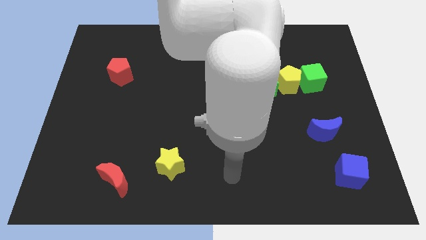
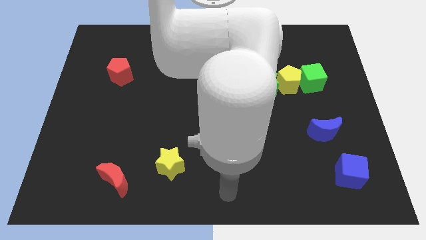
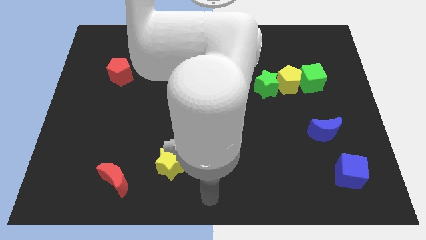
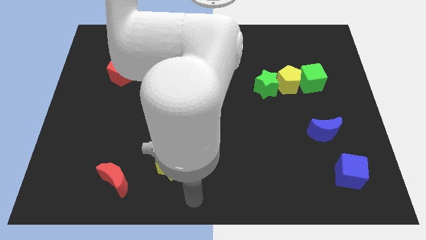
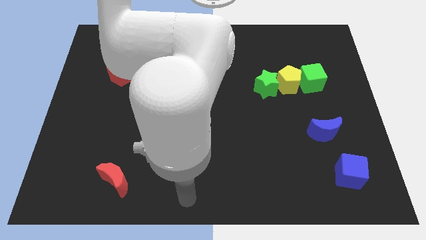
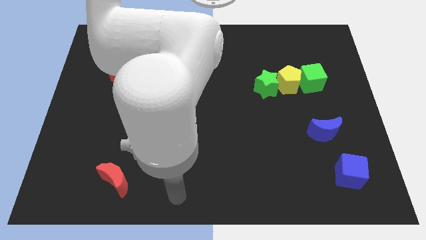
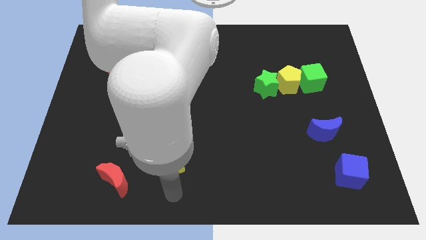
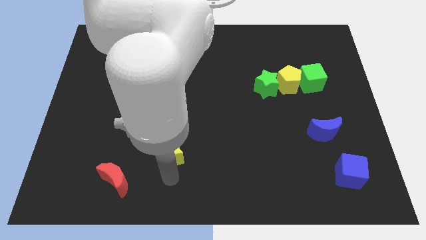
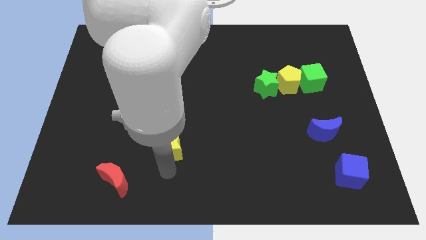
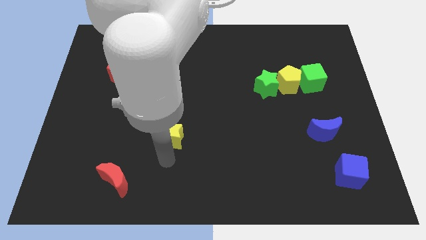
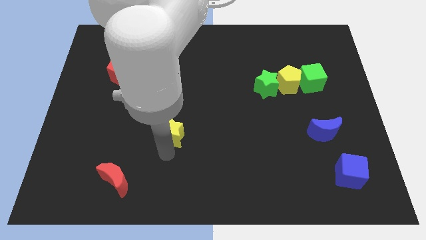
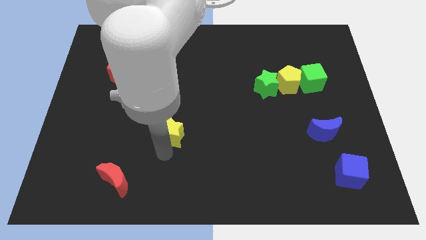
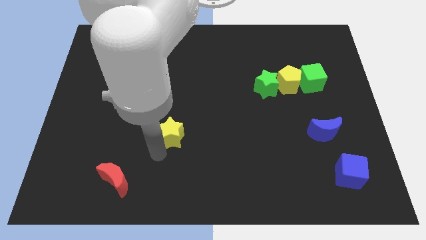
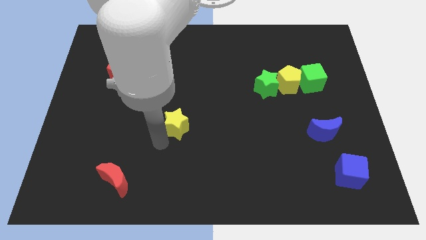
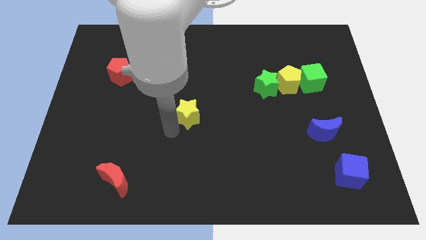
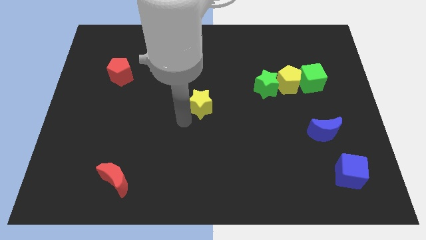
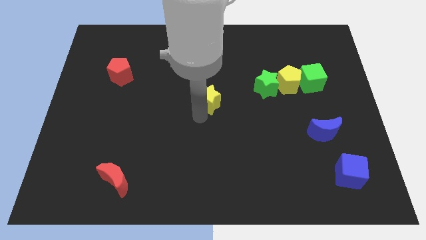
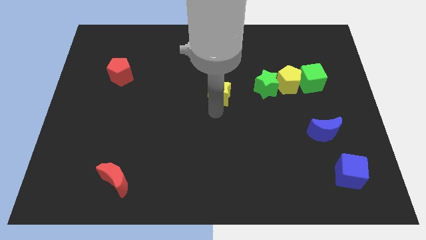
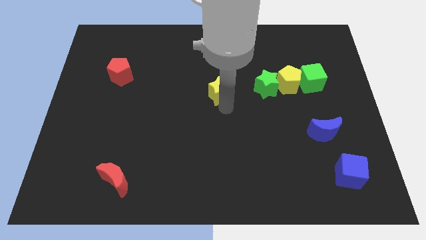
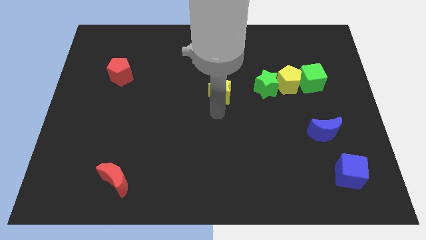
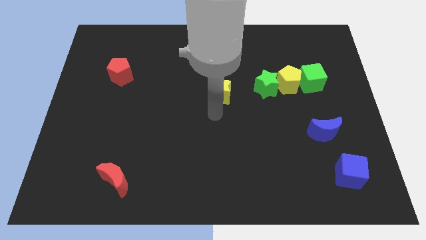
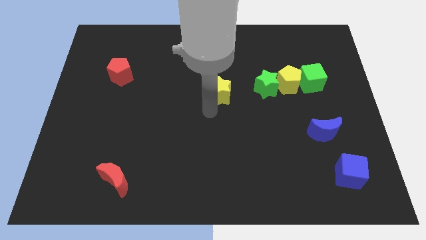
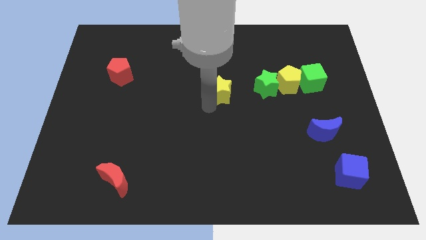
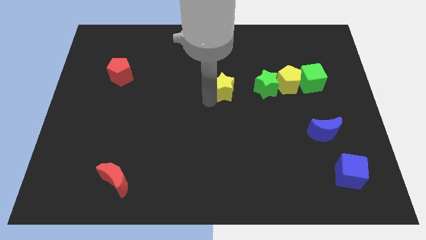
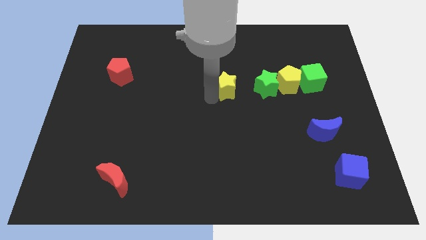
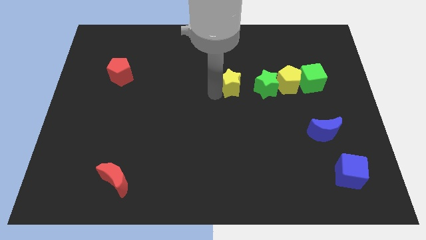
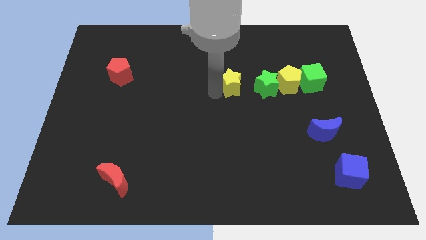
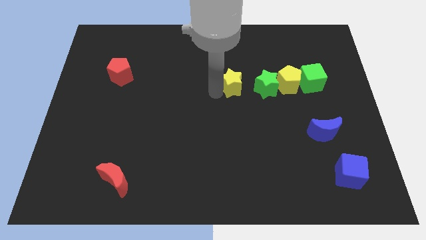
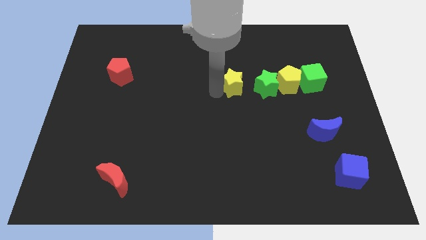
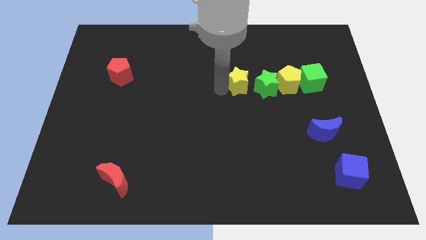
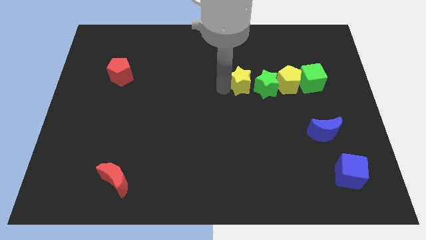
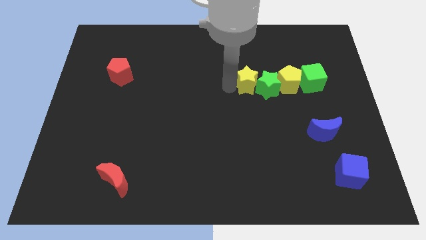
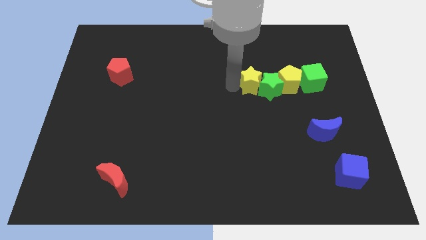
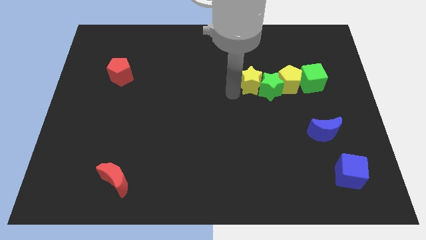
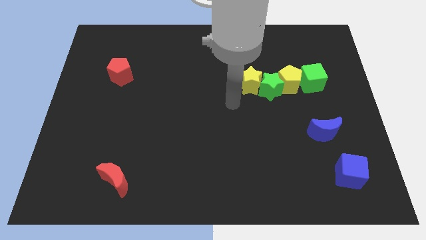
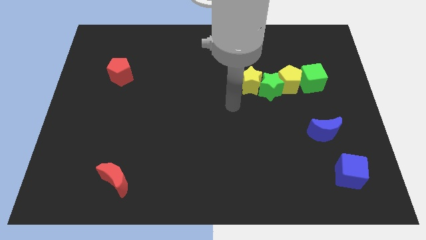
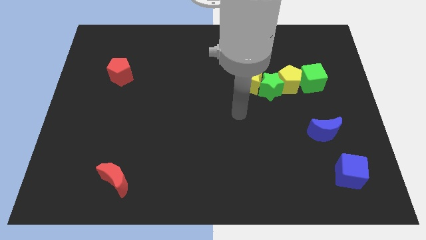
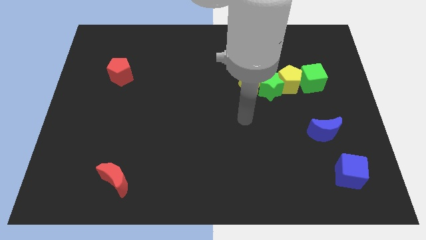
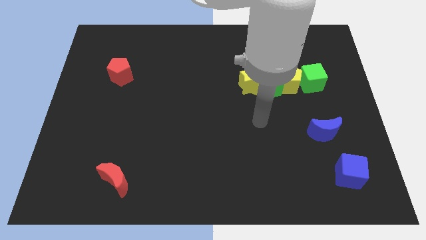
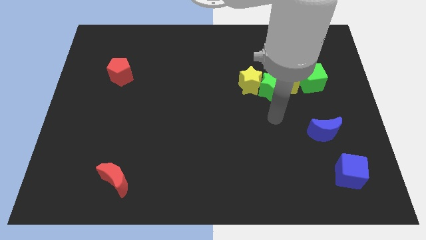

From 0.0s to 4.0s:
place yellow star to the left of green star

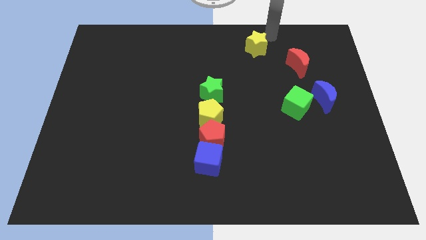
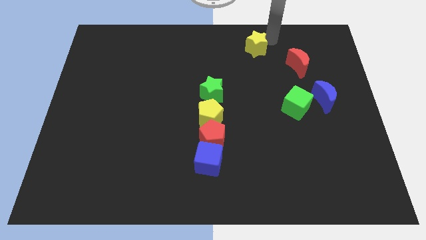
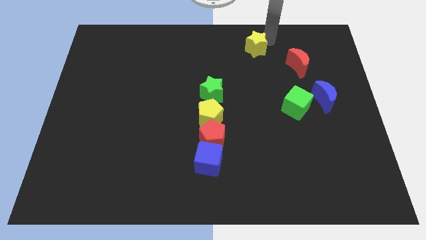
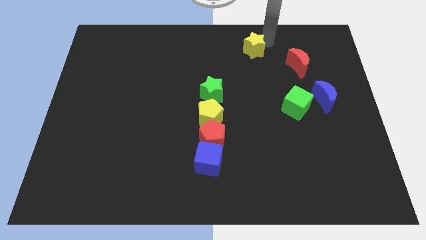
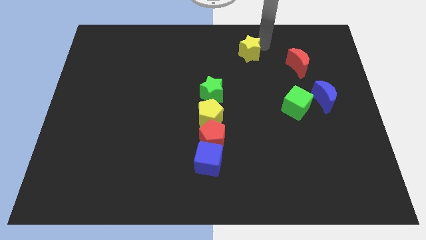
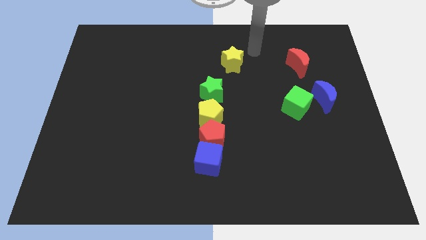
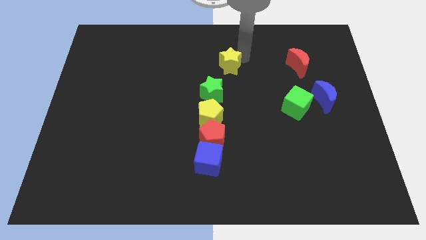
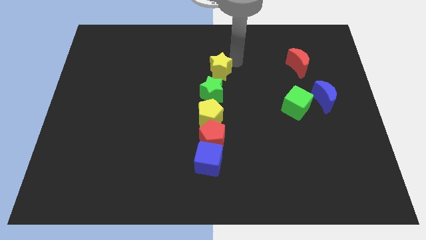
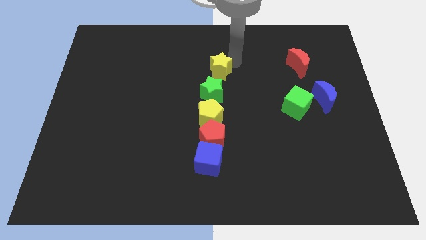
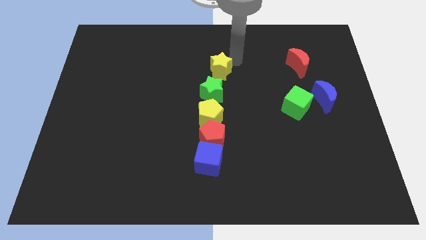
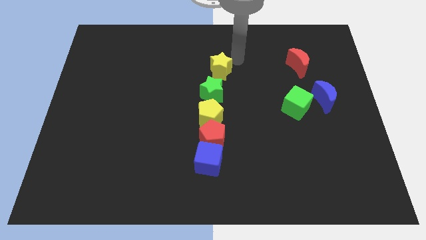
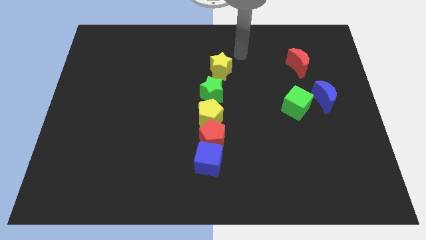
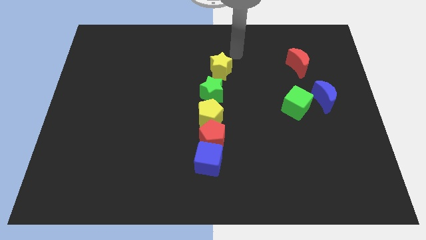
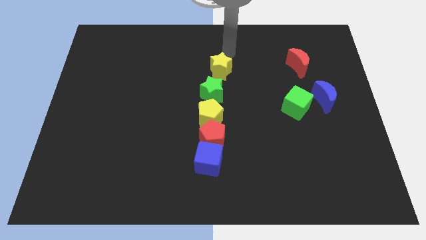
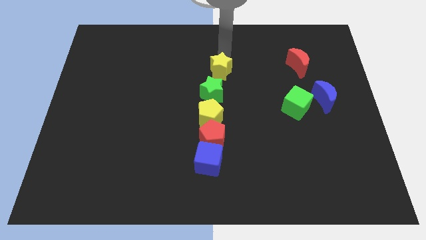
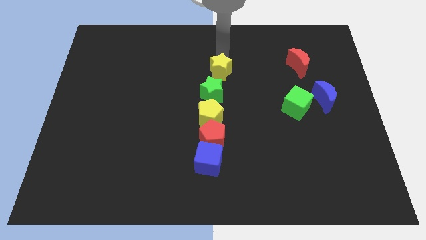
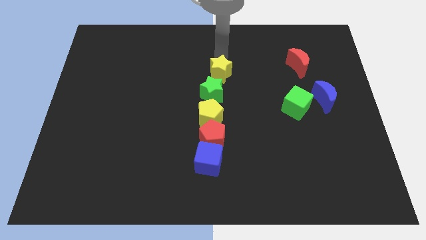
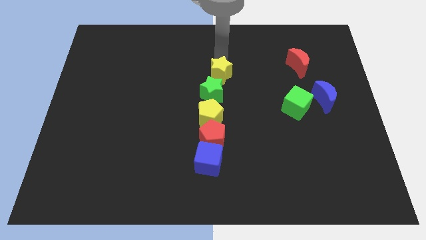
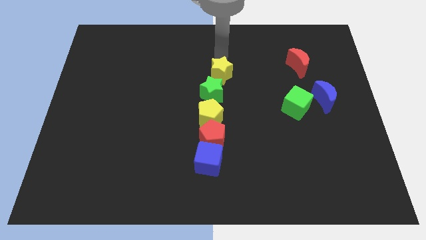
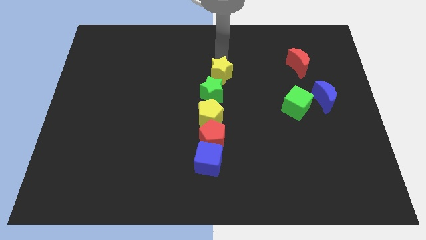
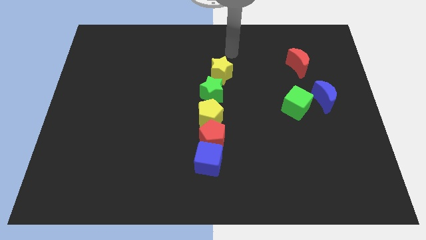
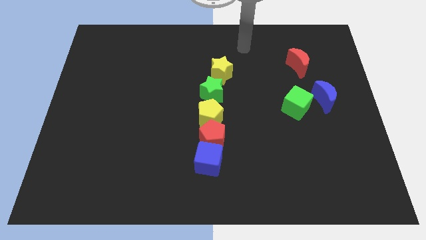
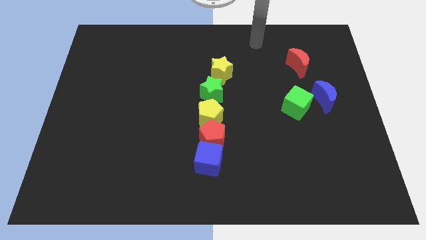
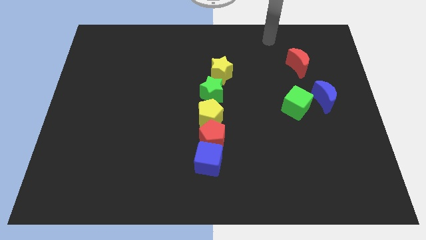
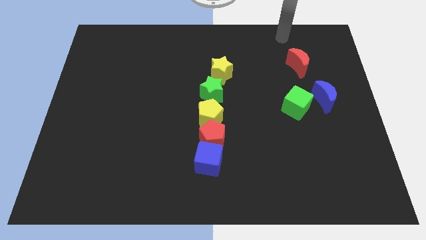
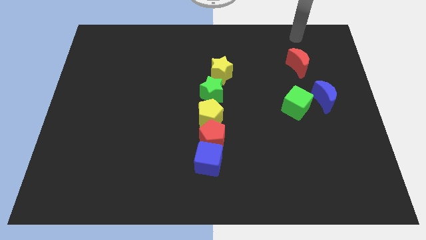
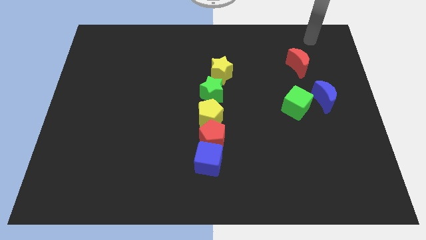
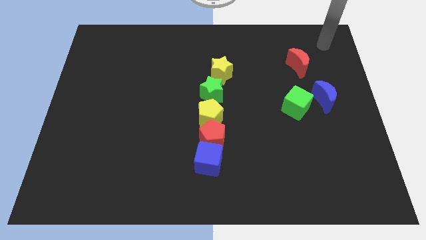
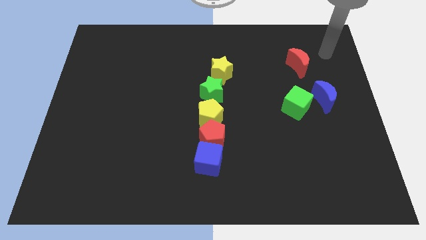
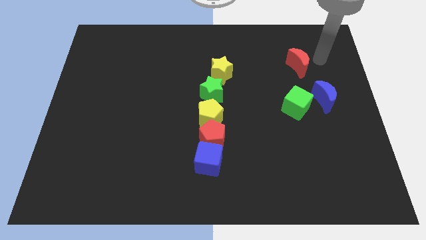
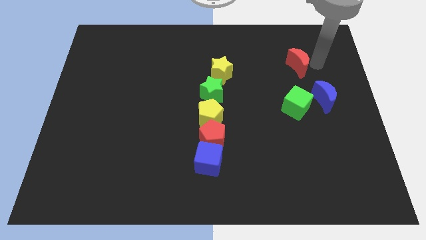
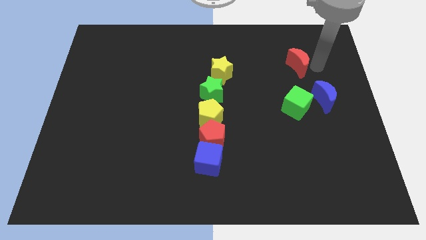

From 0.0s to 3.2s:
place yellow star above green star

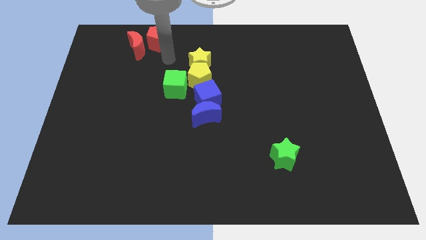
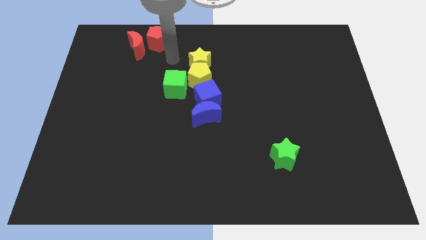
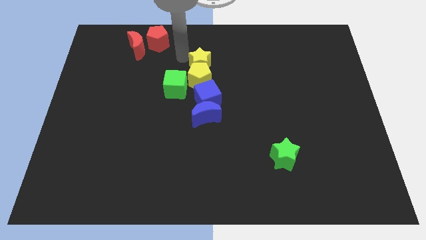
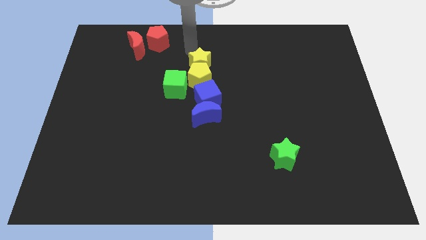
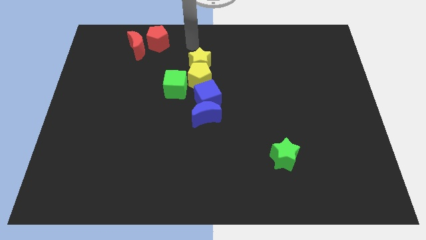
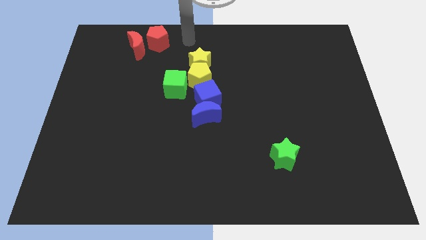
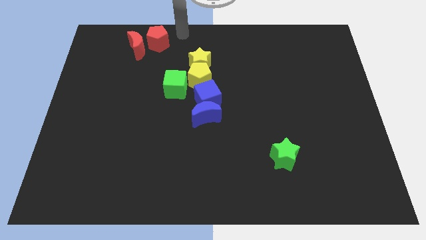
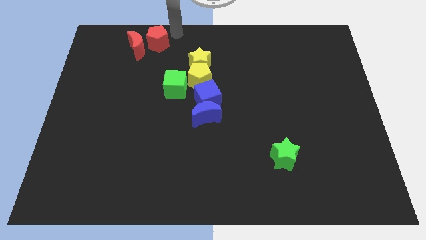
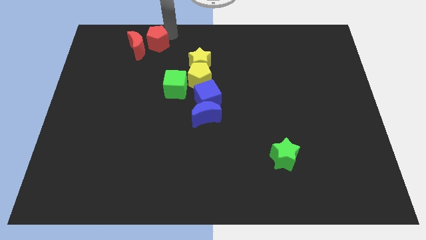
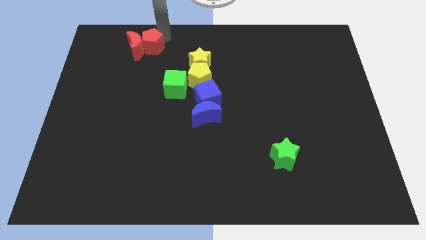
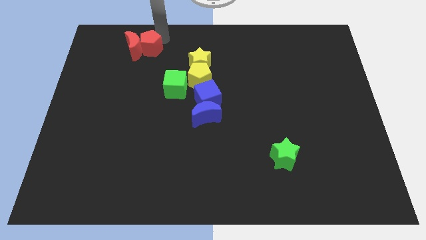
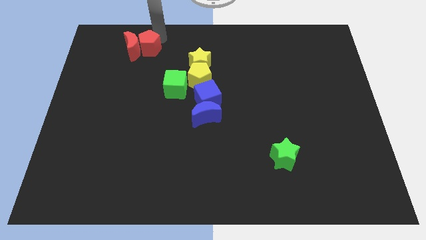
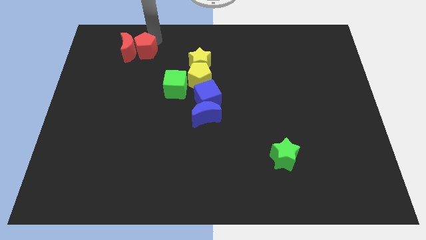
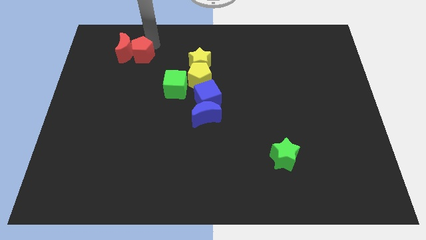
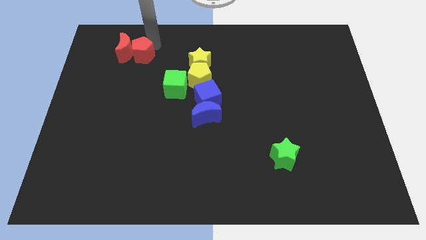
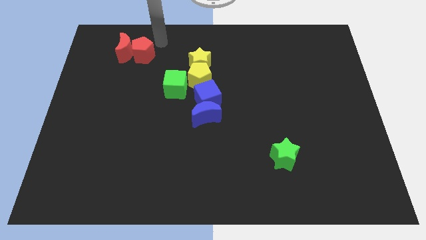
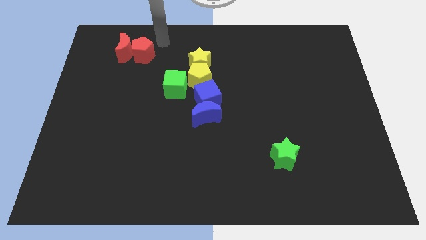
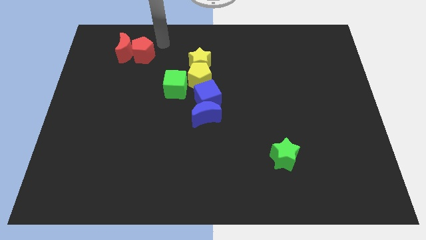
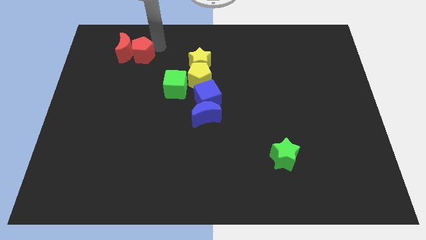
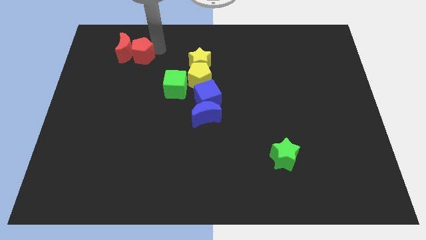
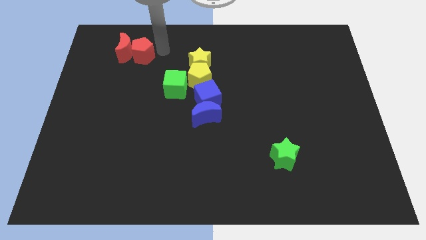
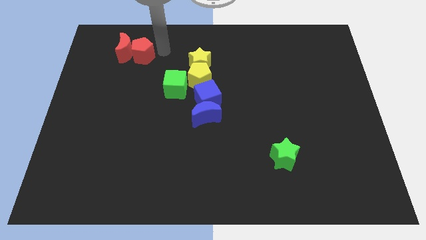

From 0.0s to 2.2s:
push the red blocks towards the left
